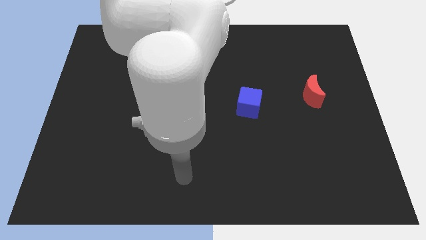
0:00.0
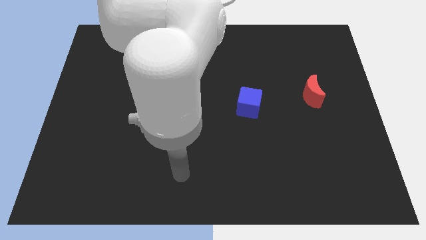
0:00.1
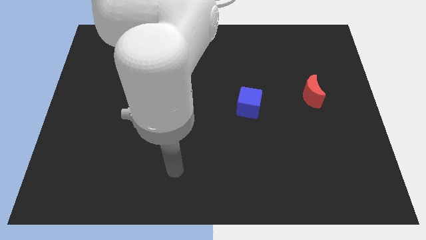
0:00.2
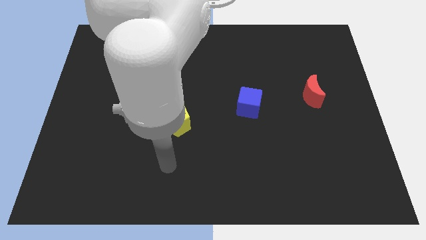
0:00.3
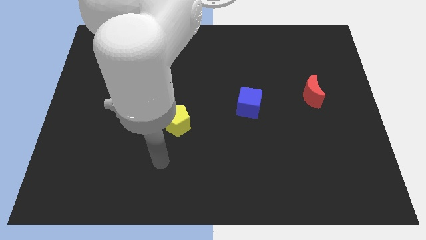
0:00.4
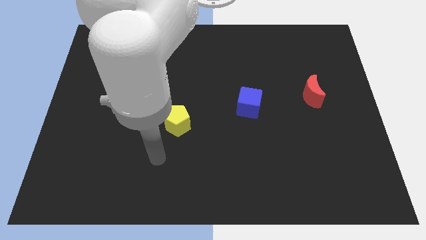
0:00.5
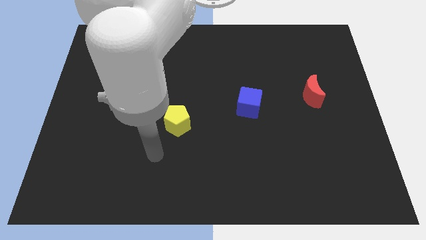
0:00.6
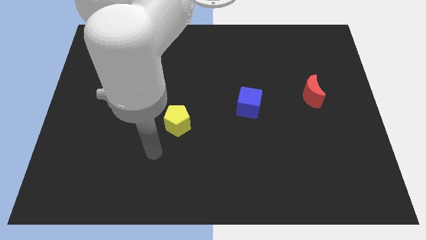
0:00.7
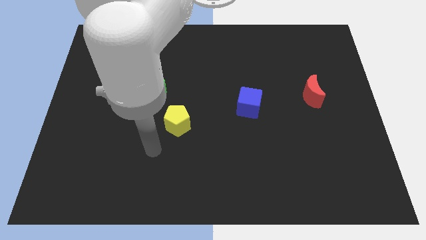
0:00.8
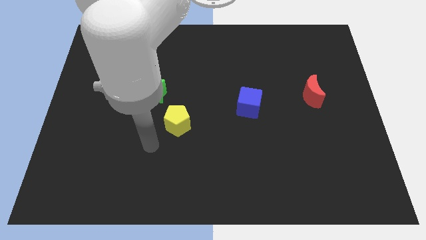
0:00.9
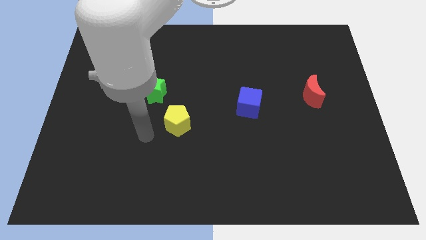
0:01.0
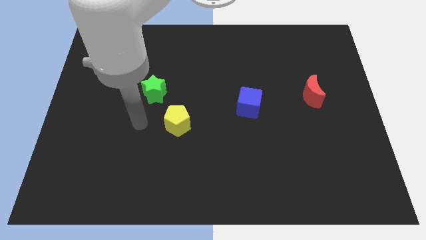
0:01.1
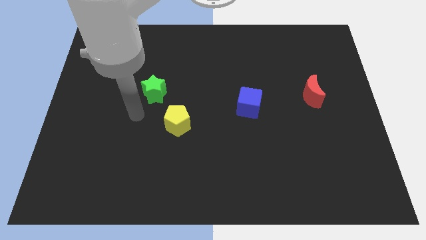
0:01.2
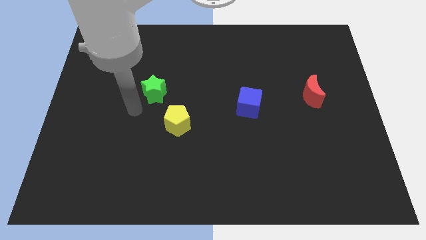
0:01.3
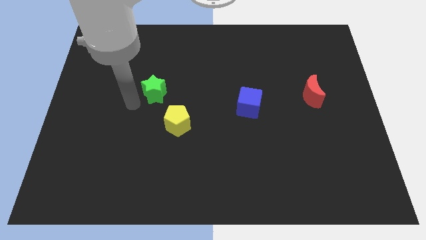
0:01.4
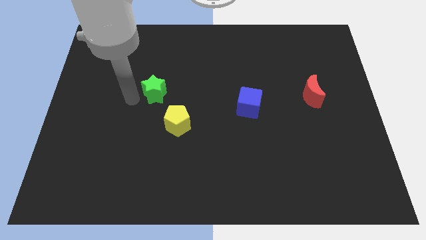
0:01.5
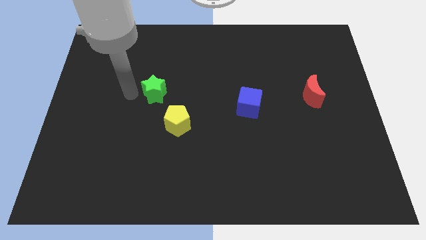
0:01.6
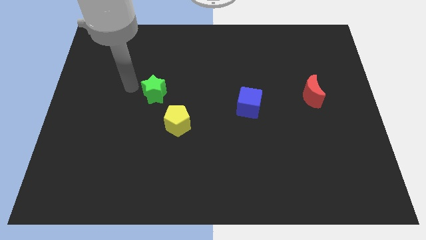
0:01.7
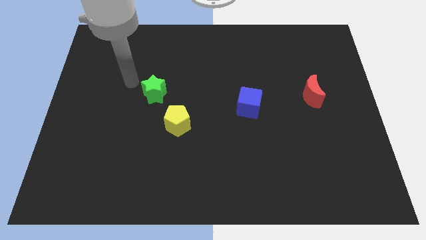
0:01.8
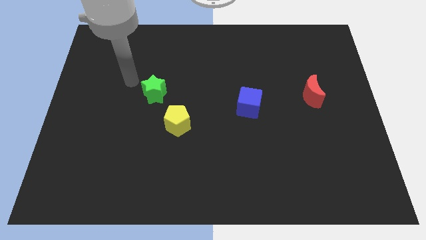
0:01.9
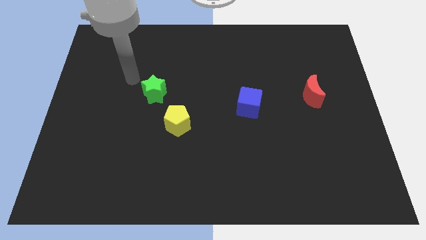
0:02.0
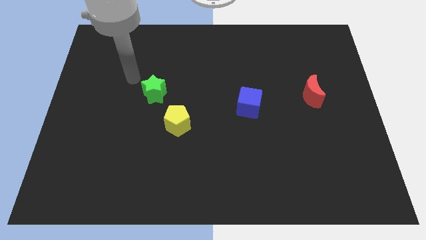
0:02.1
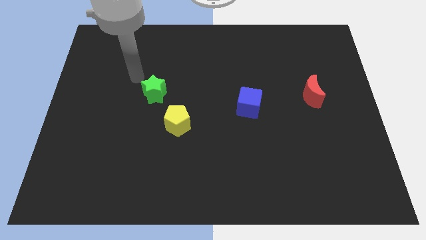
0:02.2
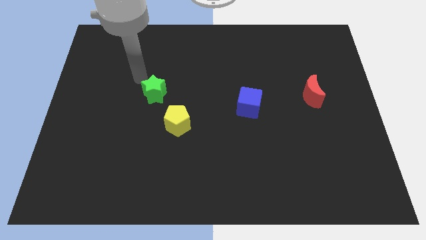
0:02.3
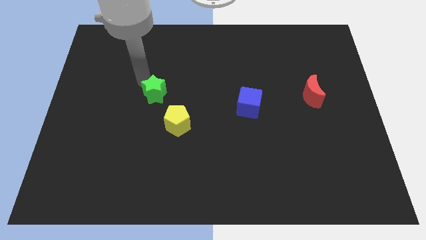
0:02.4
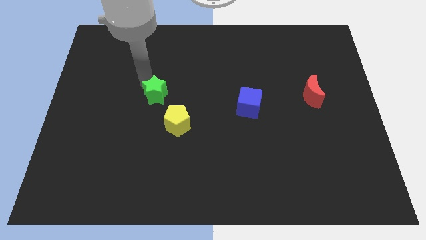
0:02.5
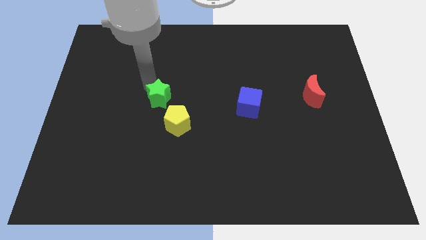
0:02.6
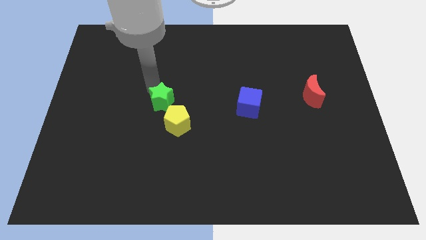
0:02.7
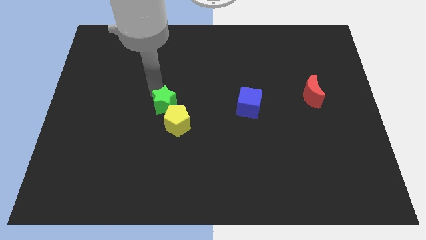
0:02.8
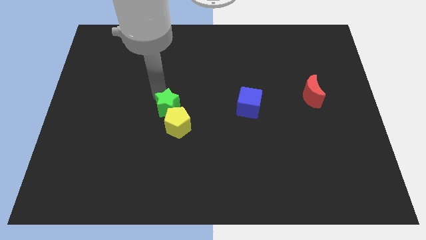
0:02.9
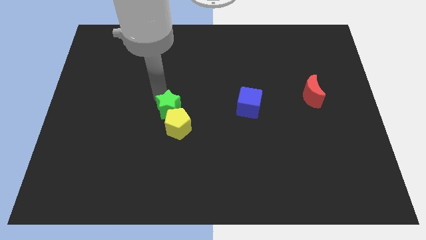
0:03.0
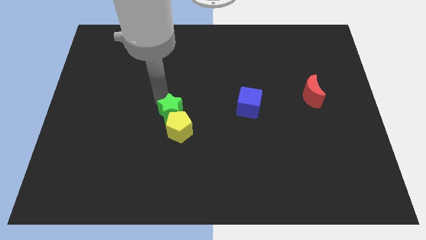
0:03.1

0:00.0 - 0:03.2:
put the green star close to the yellow pentagon

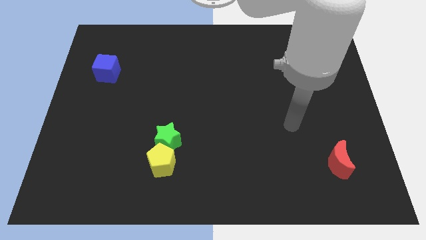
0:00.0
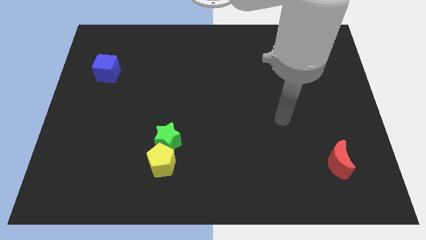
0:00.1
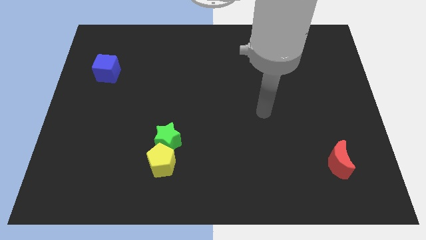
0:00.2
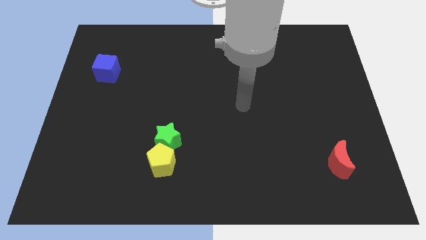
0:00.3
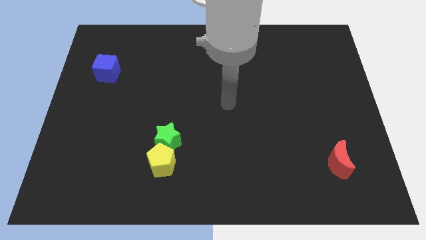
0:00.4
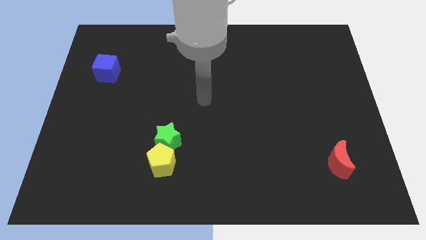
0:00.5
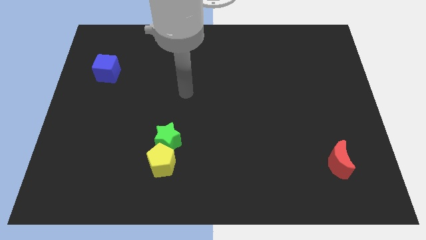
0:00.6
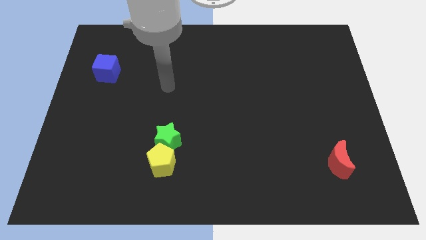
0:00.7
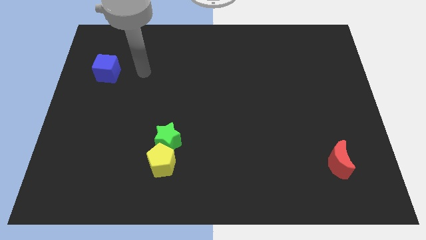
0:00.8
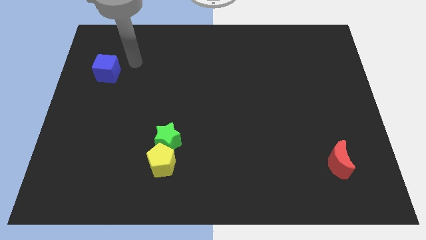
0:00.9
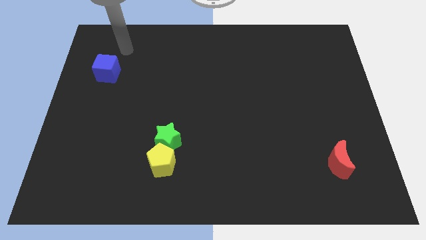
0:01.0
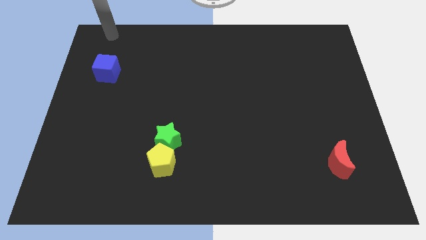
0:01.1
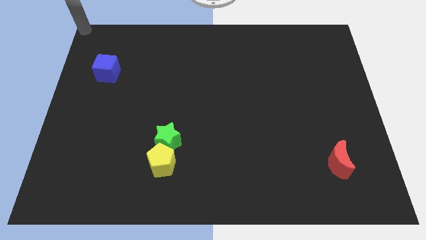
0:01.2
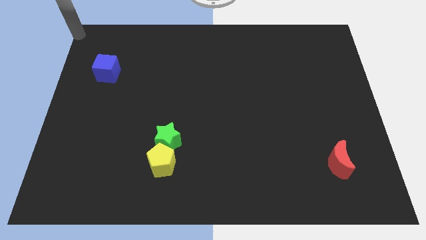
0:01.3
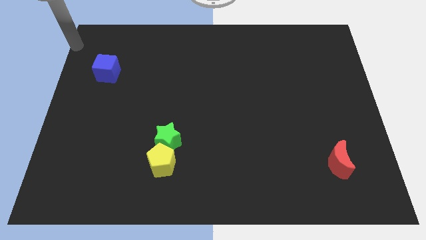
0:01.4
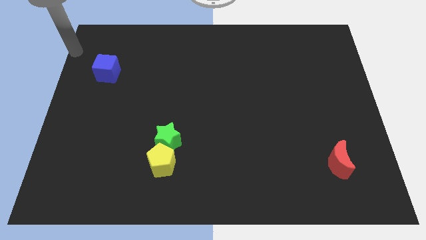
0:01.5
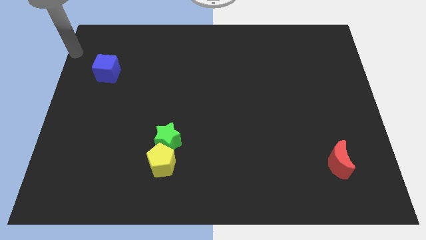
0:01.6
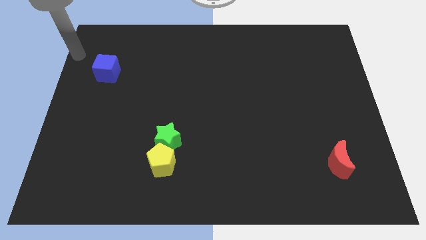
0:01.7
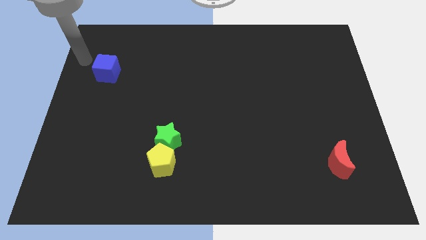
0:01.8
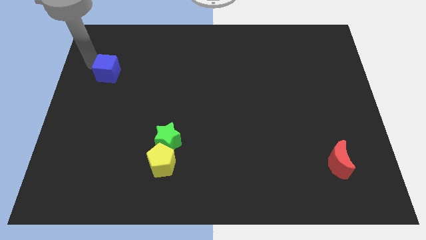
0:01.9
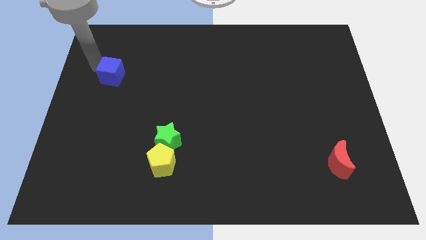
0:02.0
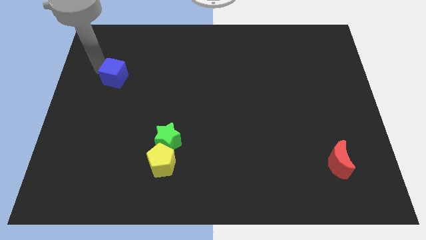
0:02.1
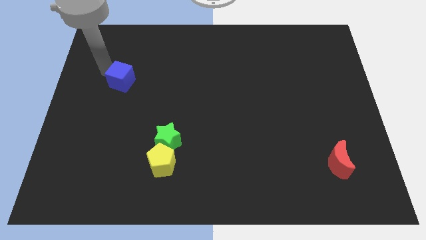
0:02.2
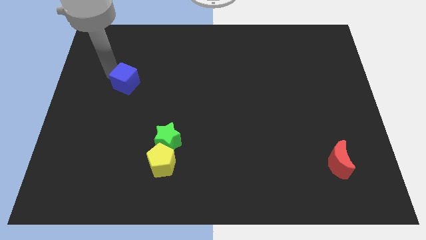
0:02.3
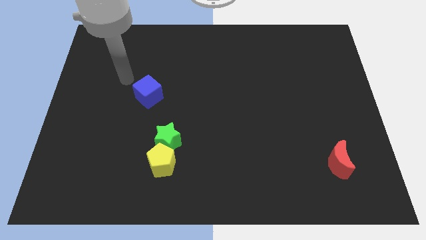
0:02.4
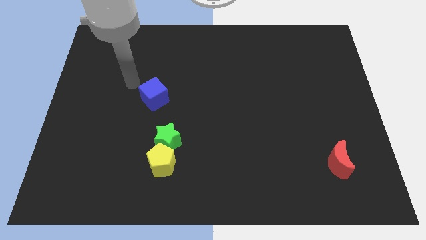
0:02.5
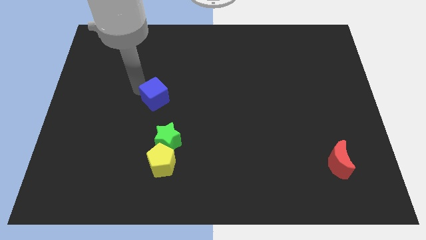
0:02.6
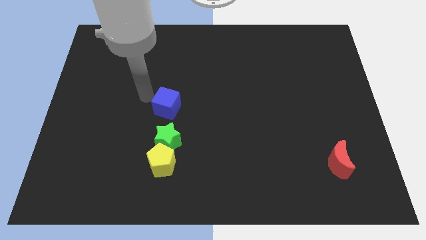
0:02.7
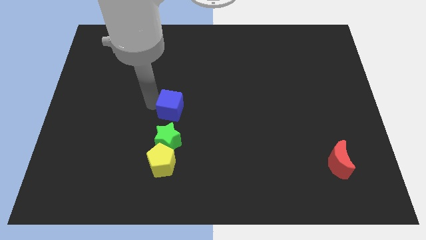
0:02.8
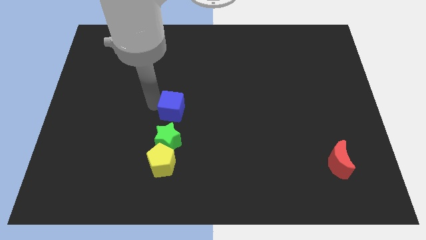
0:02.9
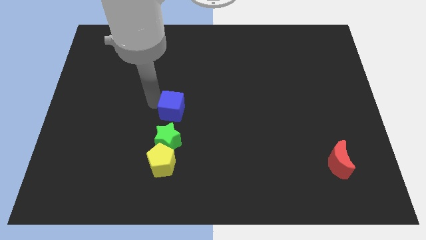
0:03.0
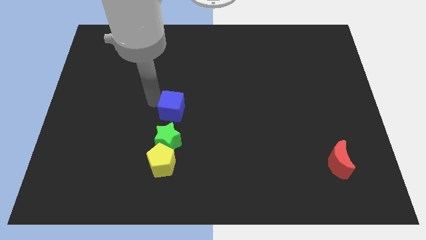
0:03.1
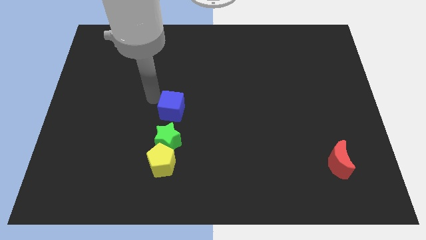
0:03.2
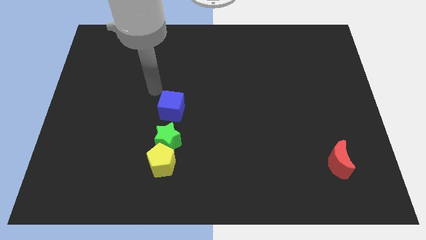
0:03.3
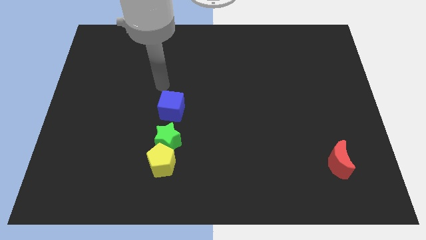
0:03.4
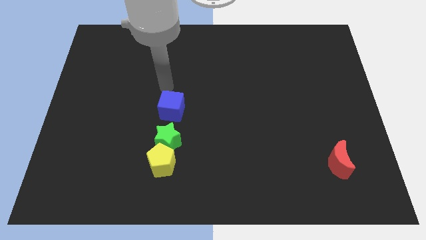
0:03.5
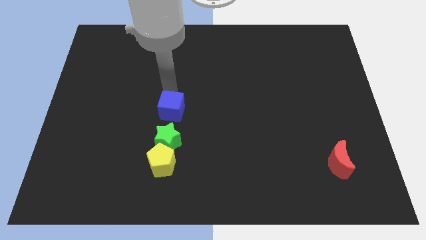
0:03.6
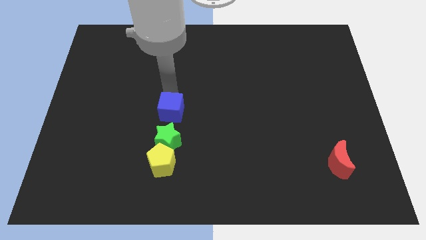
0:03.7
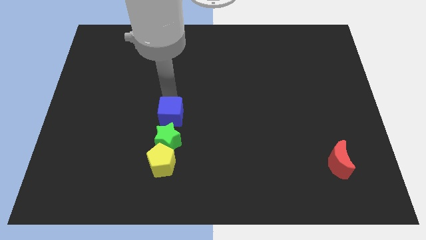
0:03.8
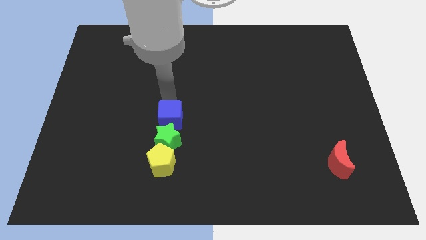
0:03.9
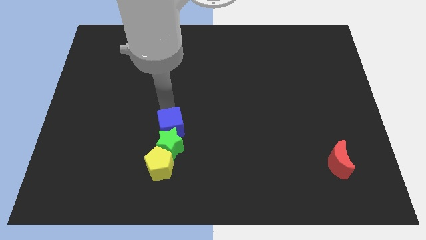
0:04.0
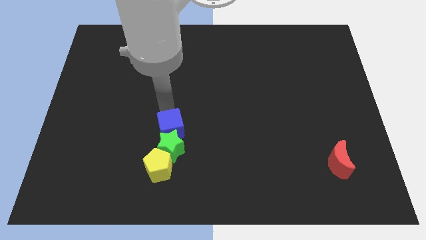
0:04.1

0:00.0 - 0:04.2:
put the blue cube to the green block

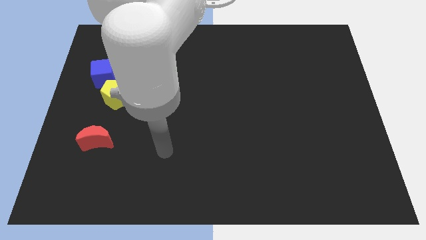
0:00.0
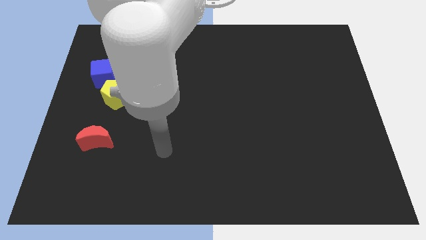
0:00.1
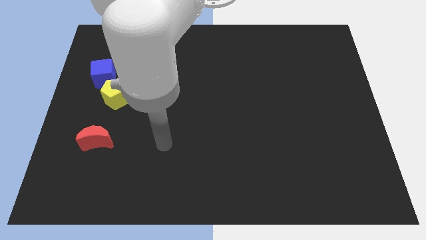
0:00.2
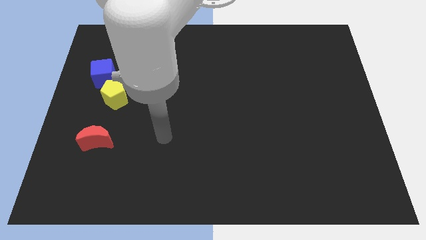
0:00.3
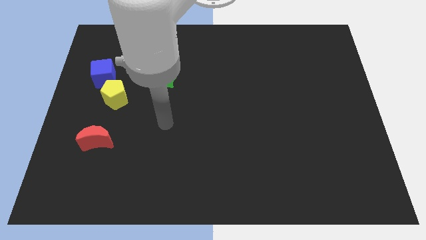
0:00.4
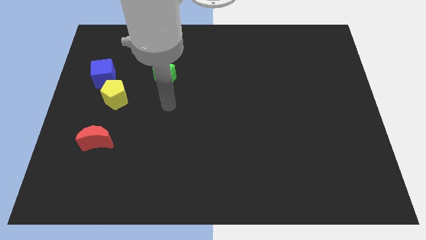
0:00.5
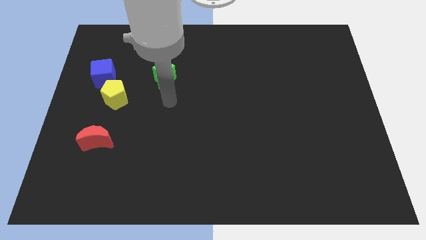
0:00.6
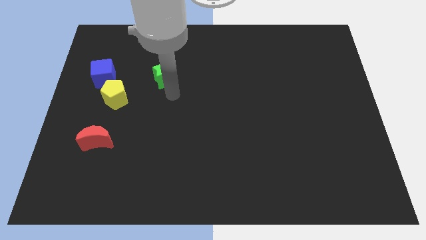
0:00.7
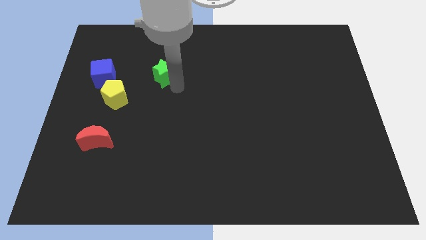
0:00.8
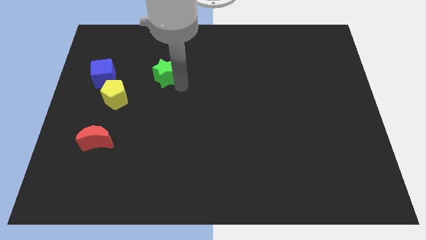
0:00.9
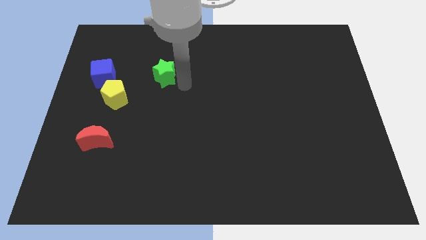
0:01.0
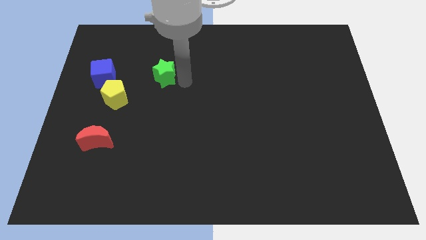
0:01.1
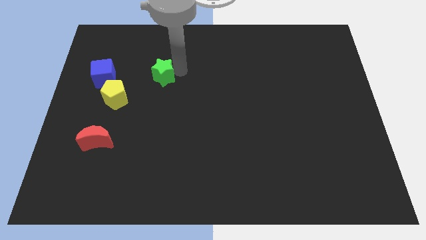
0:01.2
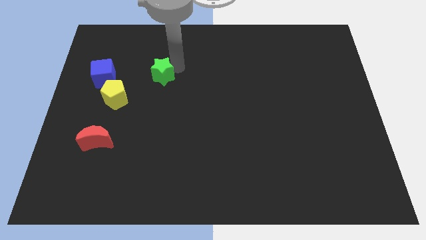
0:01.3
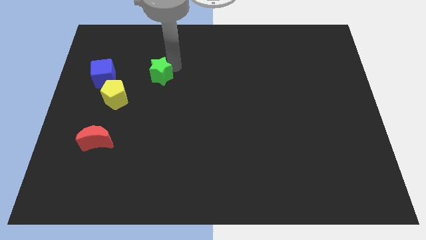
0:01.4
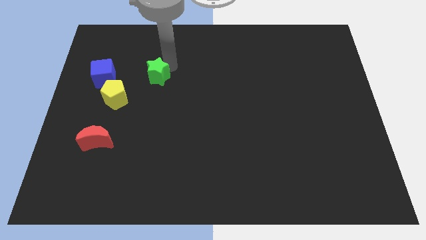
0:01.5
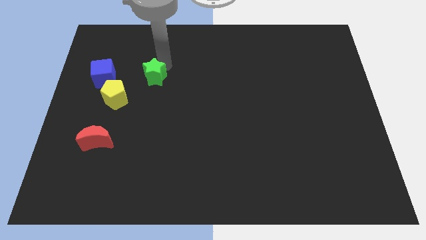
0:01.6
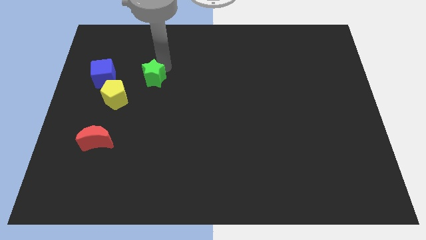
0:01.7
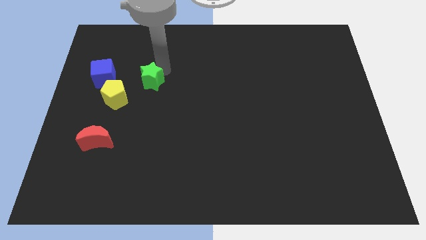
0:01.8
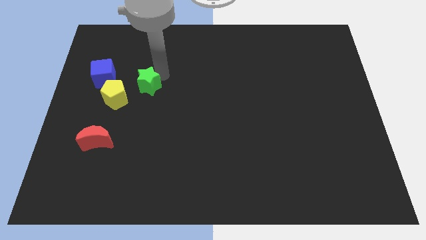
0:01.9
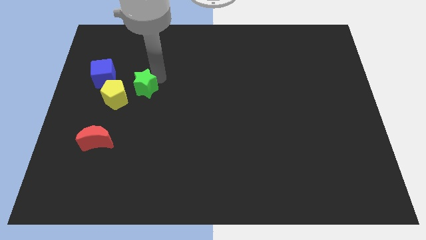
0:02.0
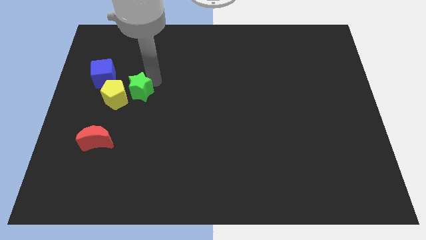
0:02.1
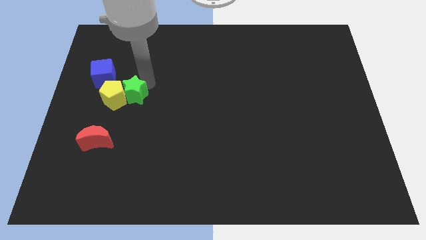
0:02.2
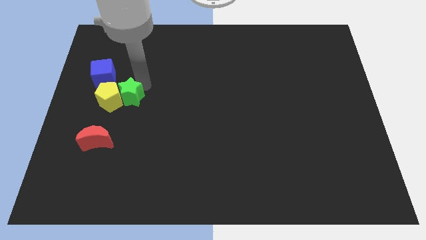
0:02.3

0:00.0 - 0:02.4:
push the green block towards the yellow block
